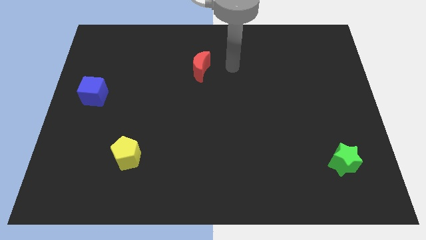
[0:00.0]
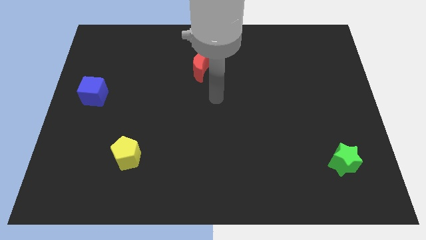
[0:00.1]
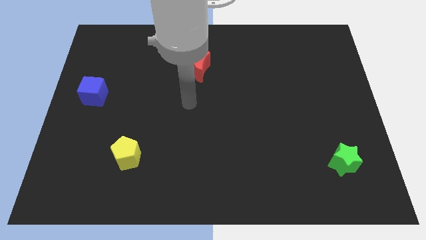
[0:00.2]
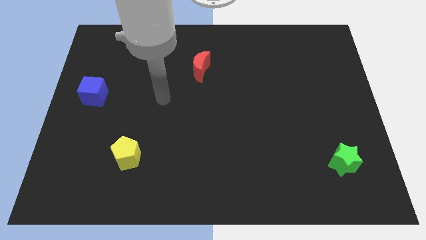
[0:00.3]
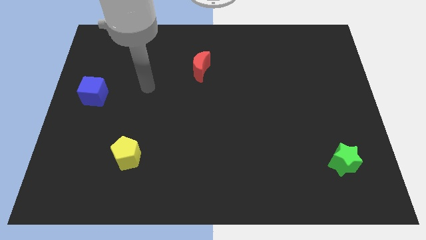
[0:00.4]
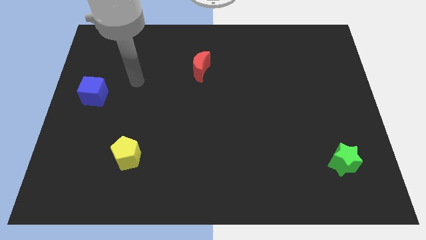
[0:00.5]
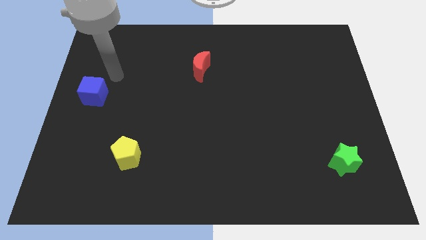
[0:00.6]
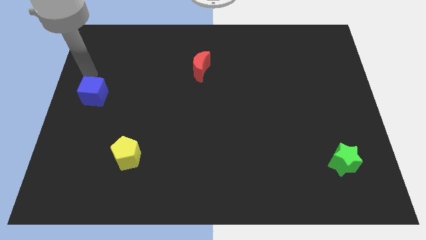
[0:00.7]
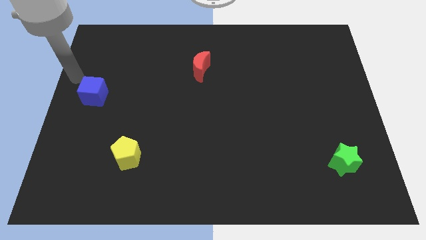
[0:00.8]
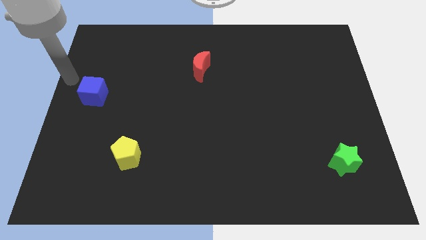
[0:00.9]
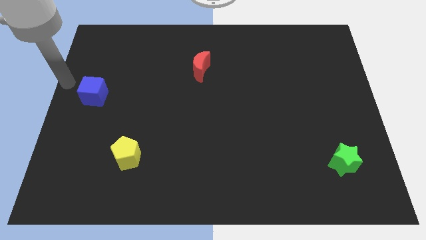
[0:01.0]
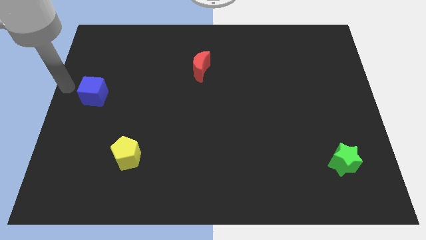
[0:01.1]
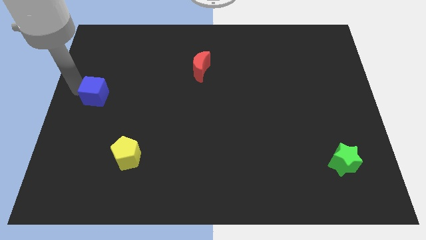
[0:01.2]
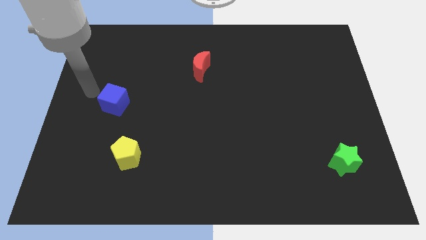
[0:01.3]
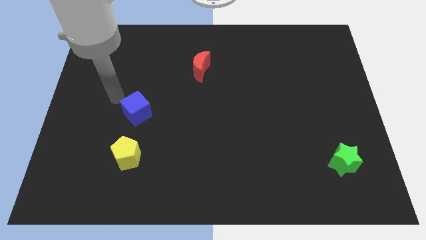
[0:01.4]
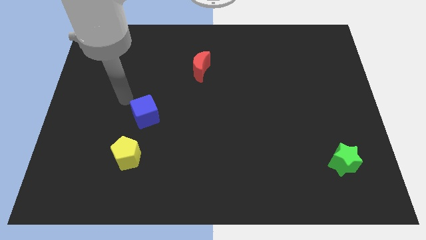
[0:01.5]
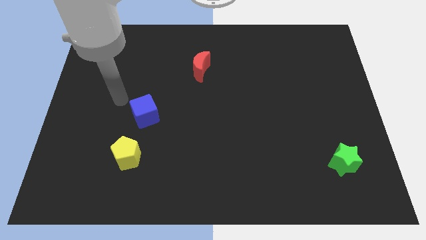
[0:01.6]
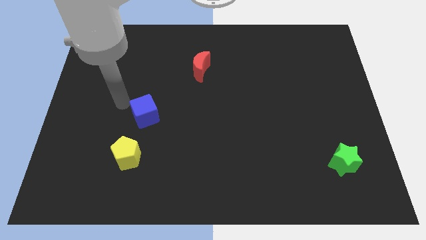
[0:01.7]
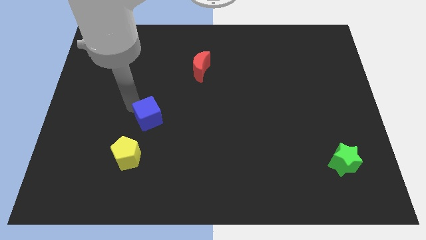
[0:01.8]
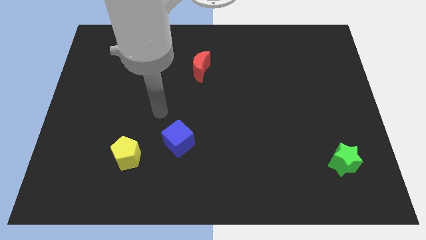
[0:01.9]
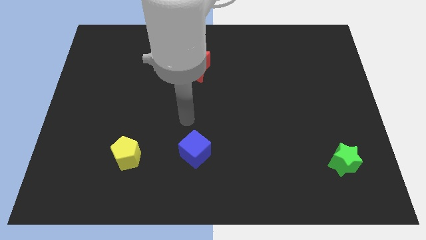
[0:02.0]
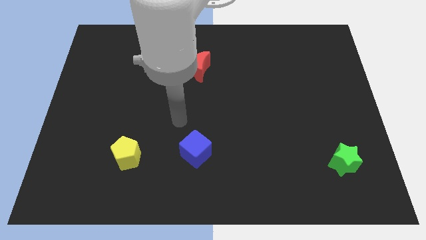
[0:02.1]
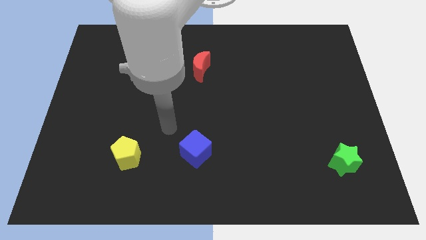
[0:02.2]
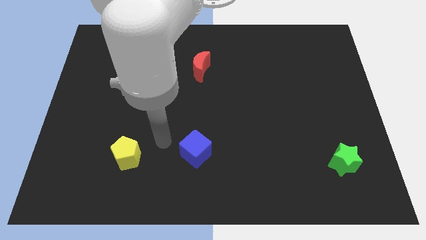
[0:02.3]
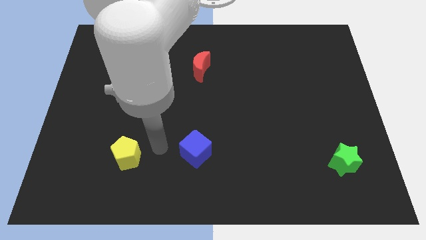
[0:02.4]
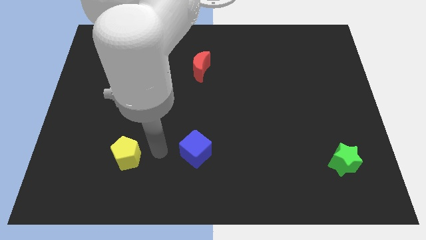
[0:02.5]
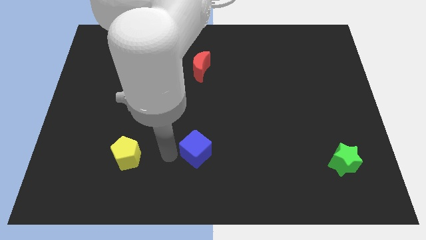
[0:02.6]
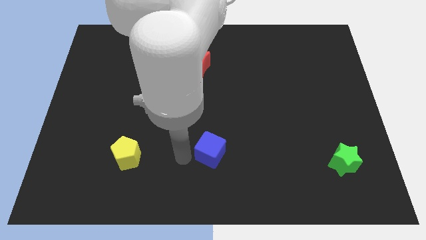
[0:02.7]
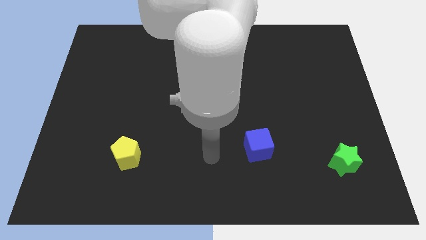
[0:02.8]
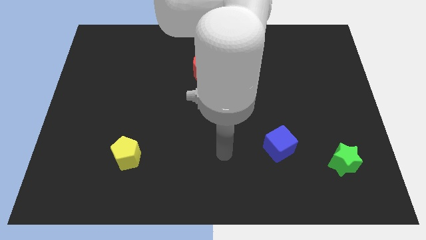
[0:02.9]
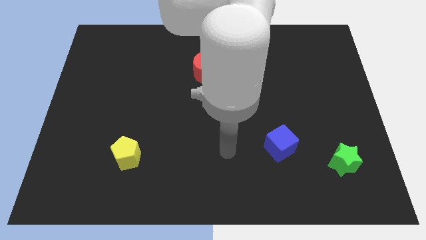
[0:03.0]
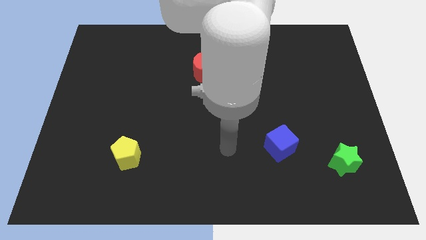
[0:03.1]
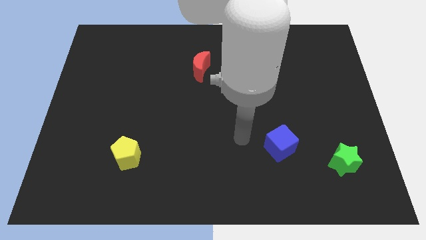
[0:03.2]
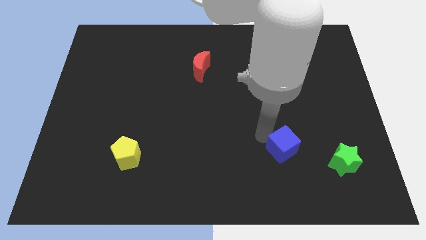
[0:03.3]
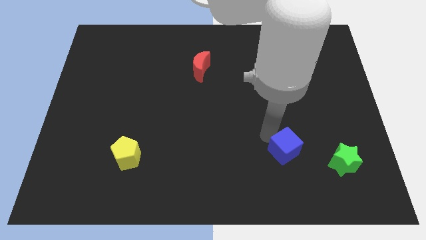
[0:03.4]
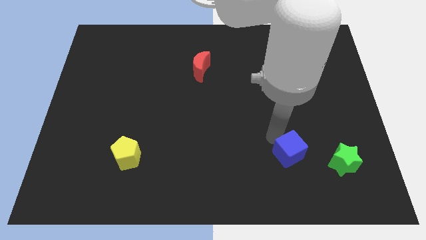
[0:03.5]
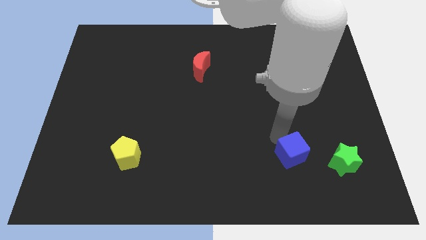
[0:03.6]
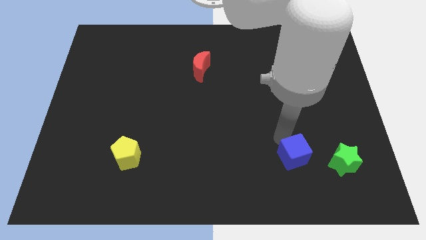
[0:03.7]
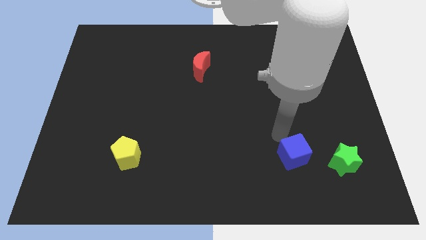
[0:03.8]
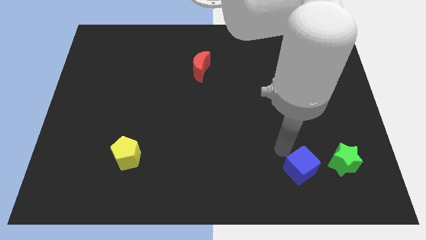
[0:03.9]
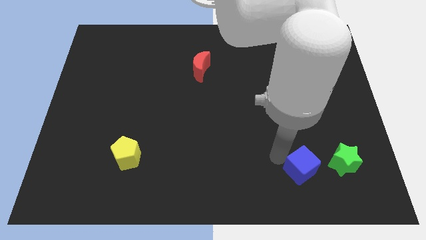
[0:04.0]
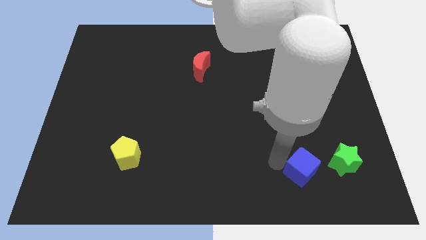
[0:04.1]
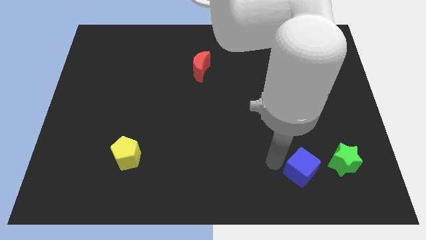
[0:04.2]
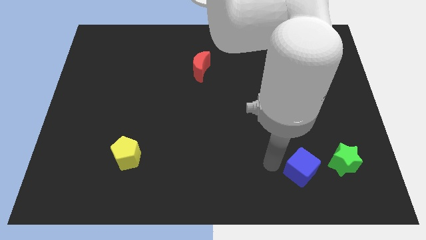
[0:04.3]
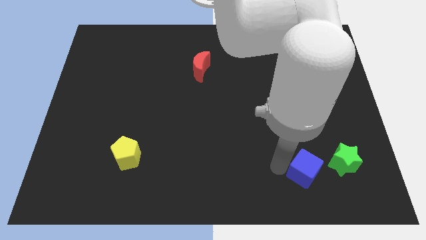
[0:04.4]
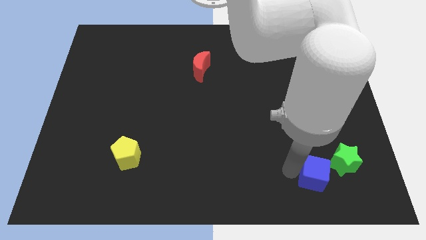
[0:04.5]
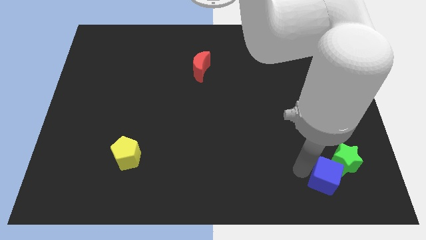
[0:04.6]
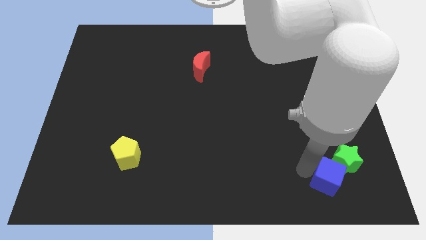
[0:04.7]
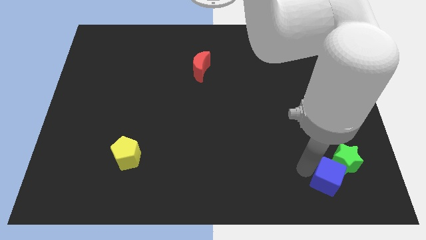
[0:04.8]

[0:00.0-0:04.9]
put the blue cube next to the star

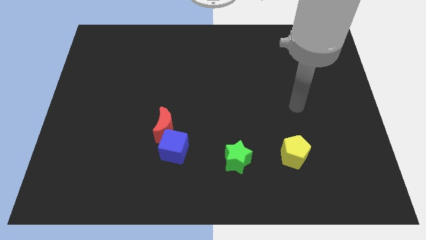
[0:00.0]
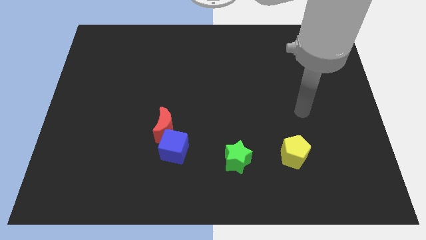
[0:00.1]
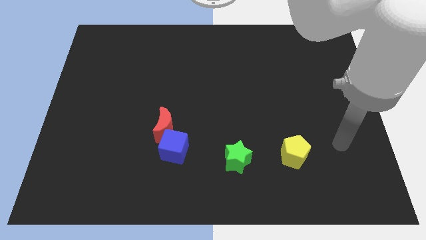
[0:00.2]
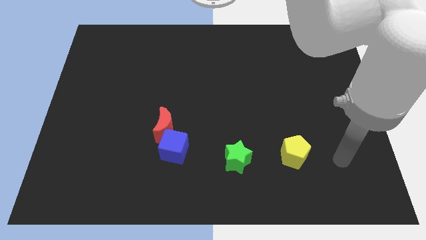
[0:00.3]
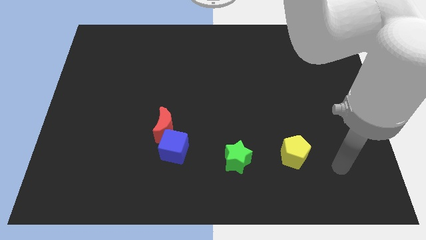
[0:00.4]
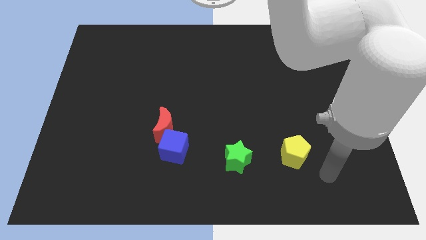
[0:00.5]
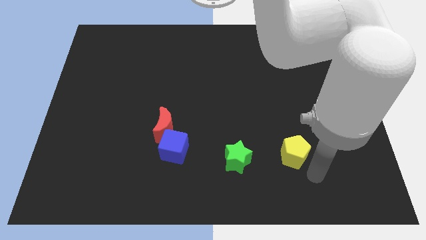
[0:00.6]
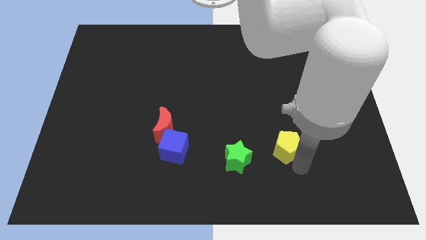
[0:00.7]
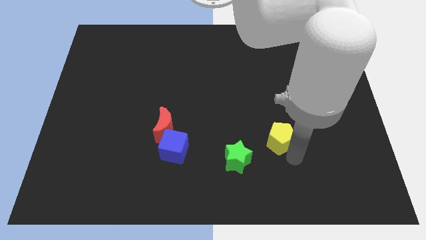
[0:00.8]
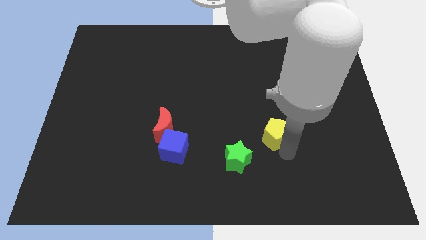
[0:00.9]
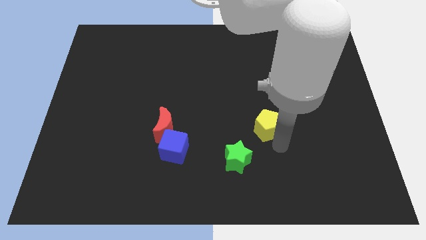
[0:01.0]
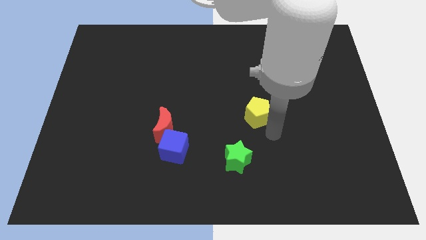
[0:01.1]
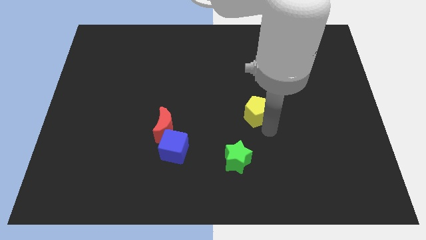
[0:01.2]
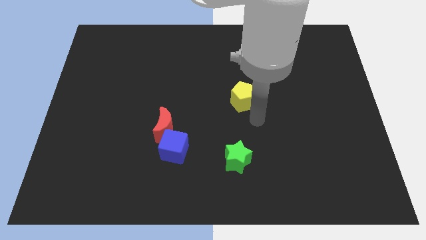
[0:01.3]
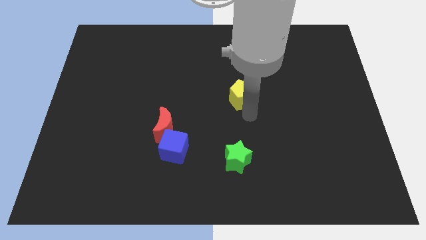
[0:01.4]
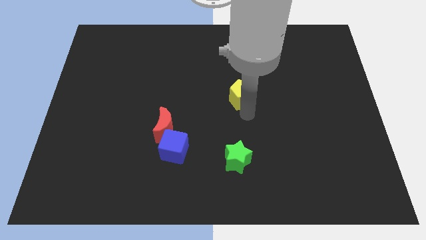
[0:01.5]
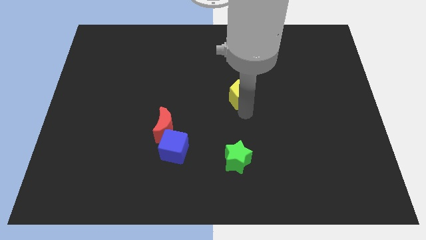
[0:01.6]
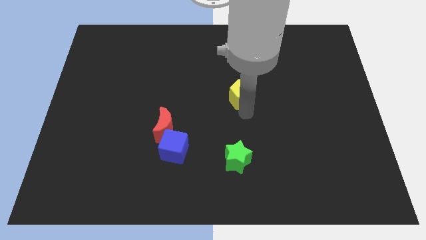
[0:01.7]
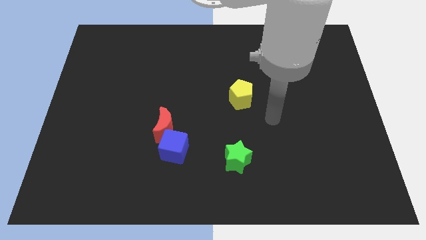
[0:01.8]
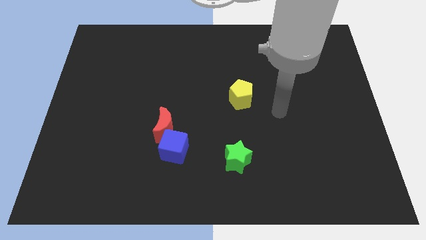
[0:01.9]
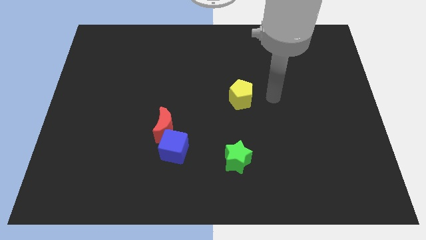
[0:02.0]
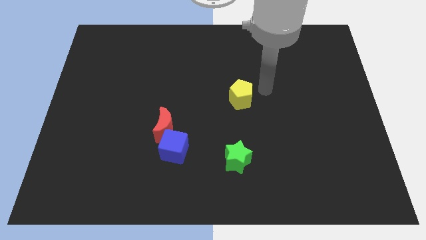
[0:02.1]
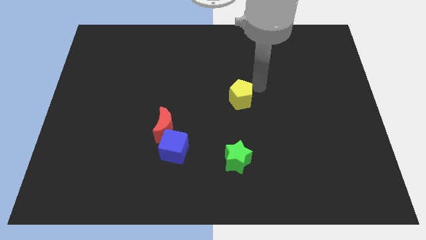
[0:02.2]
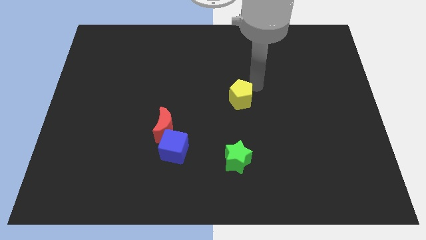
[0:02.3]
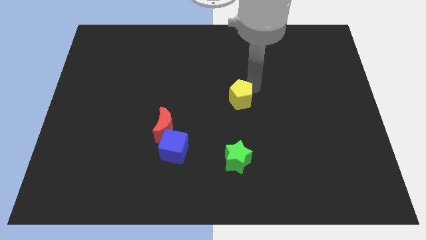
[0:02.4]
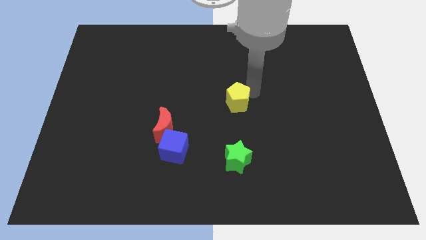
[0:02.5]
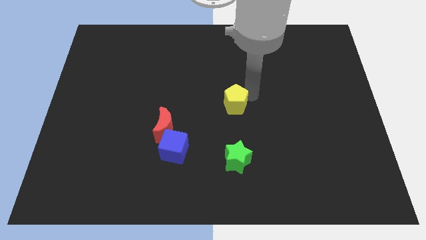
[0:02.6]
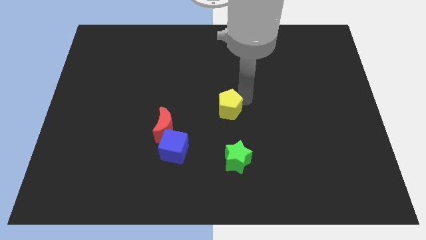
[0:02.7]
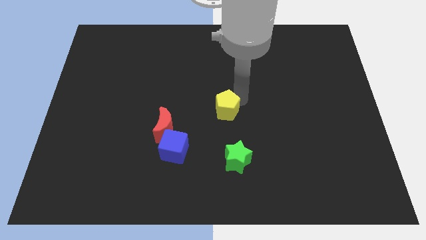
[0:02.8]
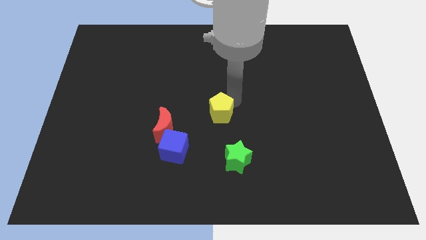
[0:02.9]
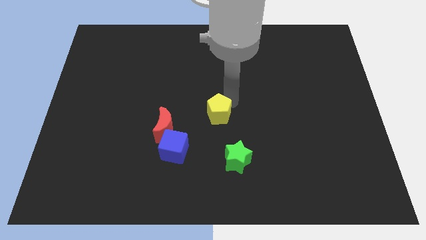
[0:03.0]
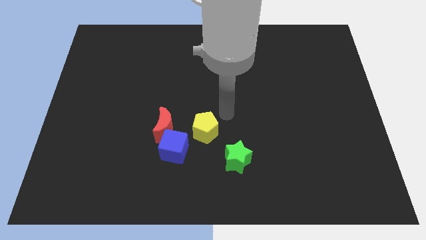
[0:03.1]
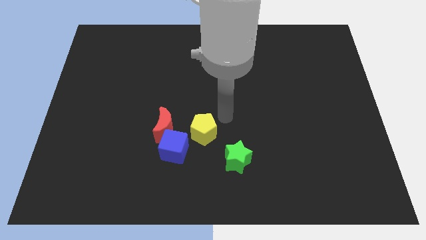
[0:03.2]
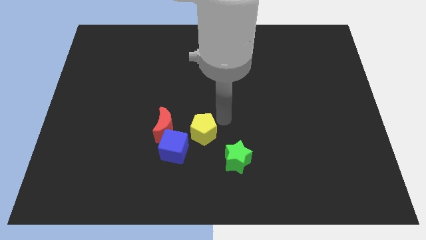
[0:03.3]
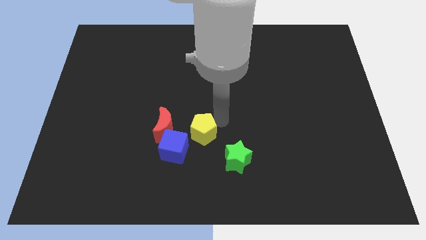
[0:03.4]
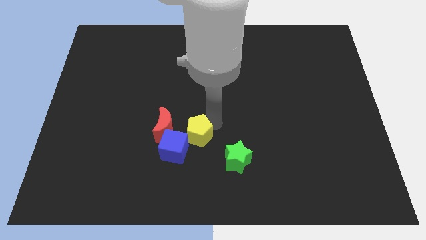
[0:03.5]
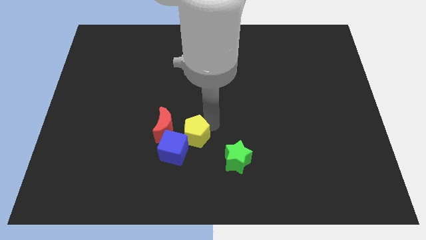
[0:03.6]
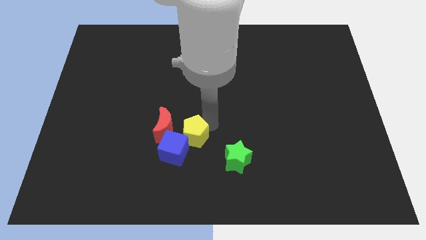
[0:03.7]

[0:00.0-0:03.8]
put the yellow block towards the blue cube

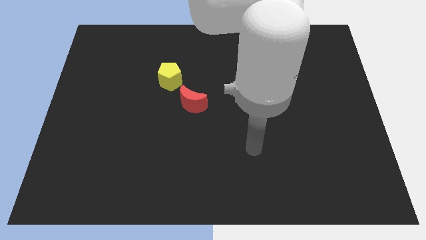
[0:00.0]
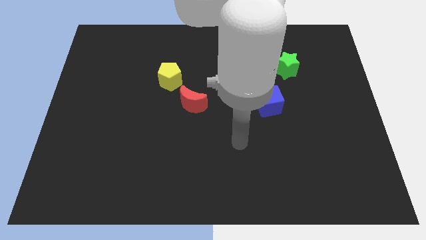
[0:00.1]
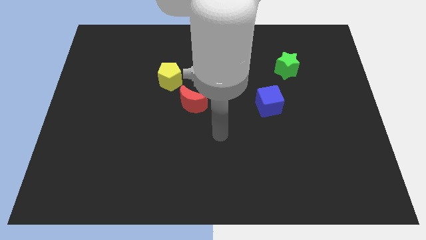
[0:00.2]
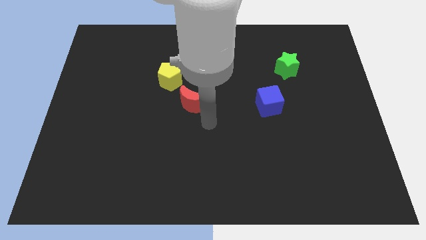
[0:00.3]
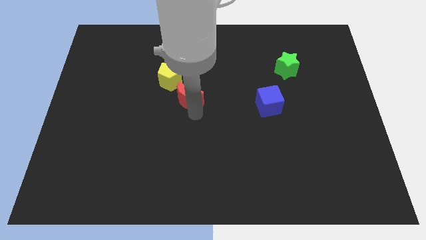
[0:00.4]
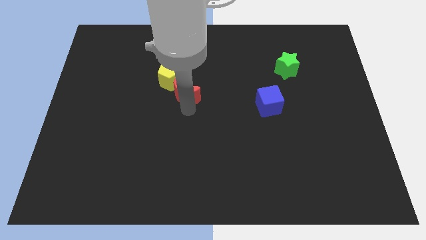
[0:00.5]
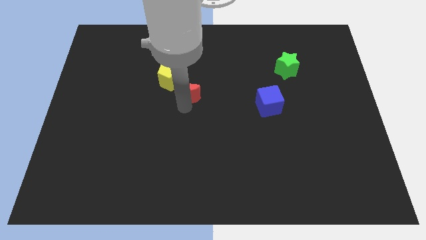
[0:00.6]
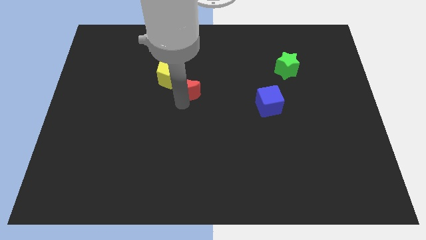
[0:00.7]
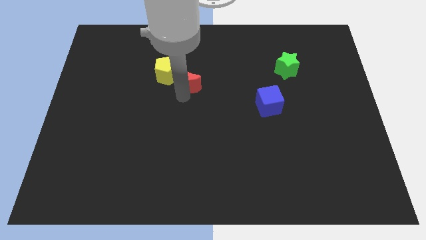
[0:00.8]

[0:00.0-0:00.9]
push the moon towards the pentagon
